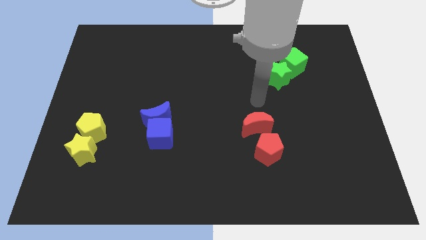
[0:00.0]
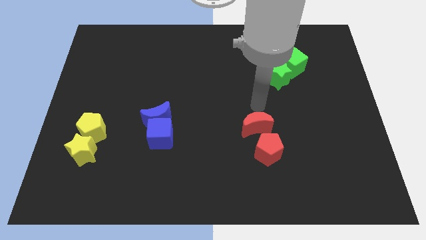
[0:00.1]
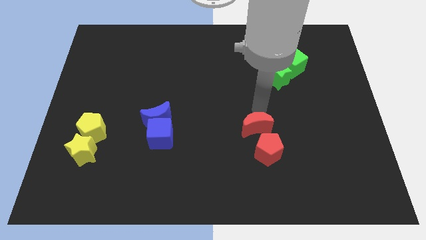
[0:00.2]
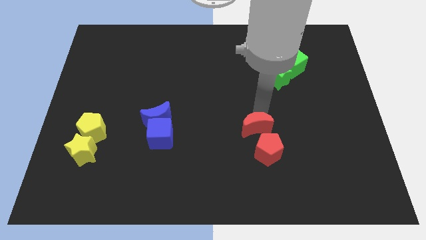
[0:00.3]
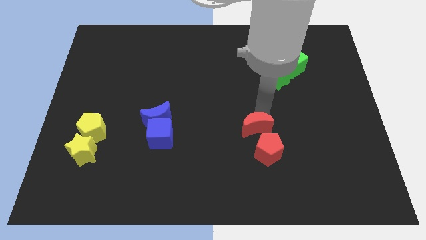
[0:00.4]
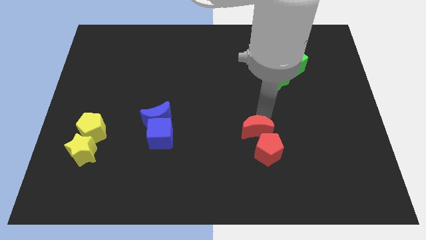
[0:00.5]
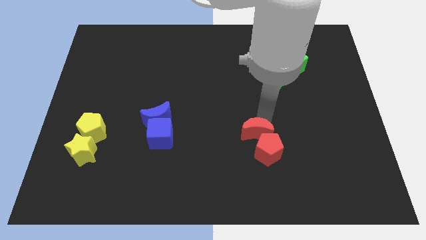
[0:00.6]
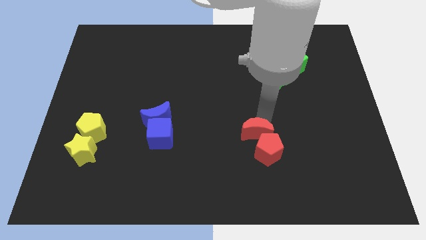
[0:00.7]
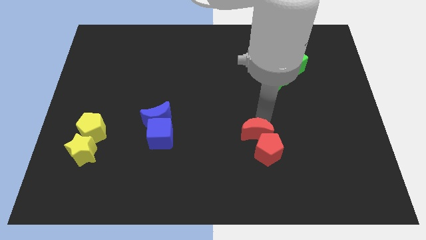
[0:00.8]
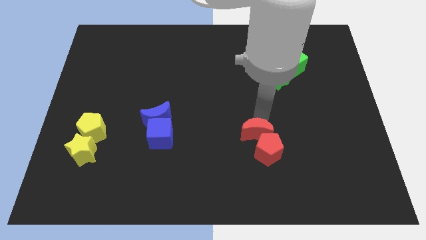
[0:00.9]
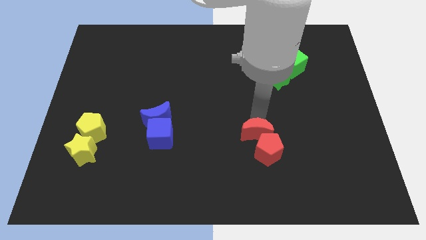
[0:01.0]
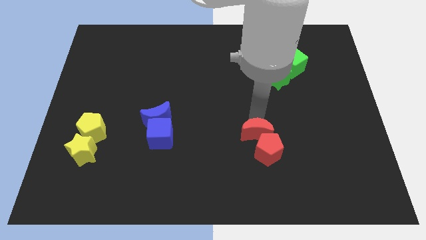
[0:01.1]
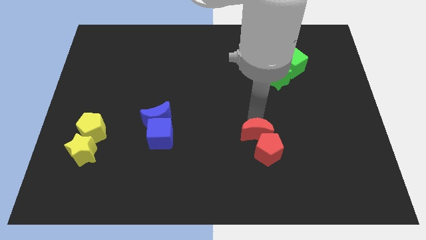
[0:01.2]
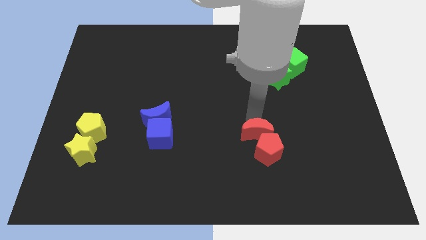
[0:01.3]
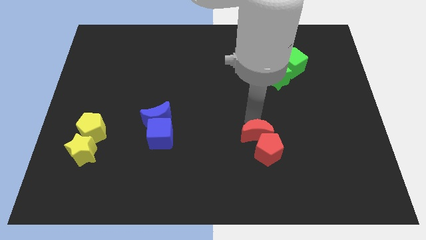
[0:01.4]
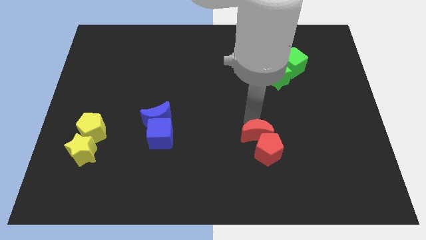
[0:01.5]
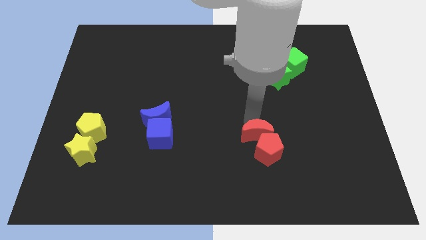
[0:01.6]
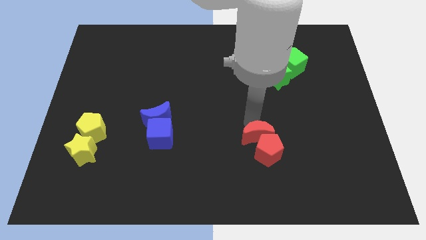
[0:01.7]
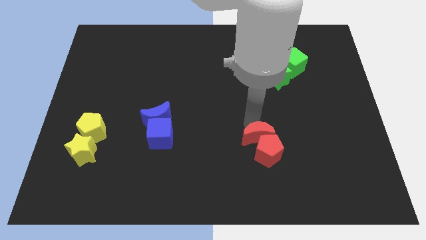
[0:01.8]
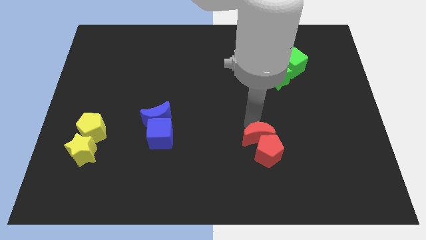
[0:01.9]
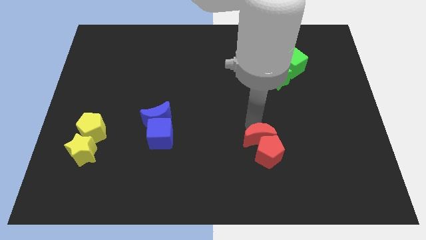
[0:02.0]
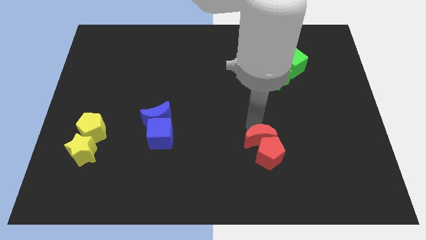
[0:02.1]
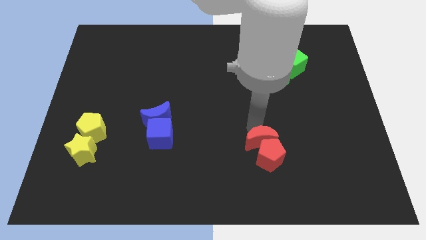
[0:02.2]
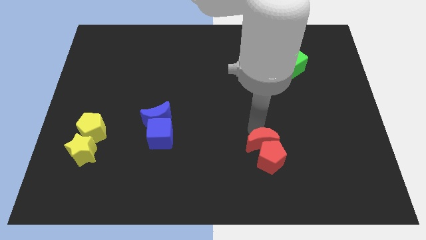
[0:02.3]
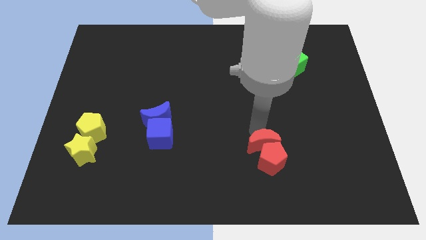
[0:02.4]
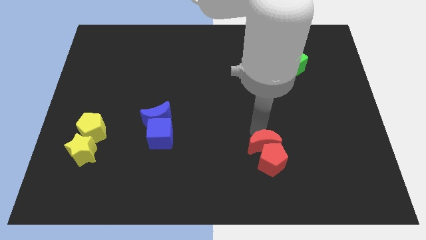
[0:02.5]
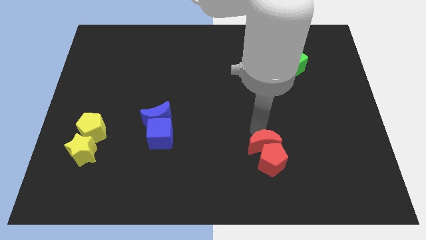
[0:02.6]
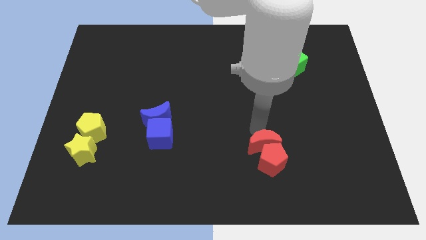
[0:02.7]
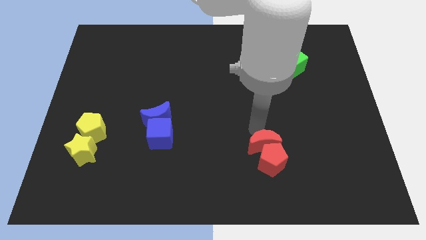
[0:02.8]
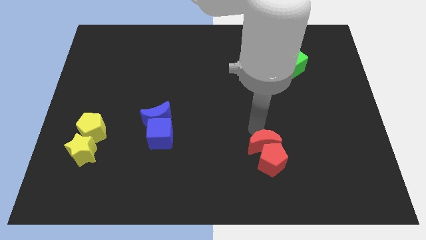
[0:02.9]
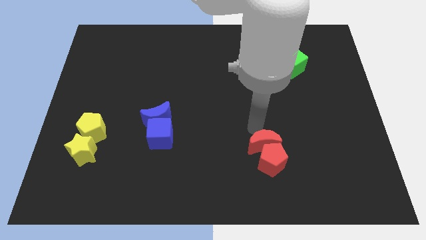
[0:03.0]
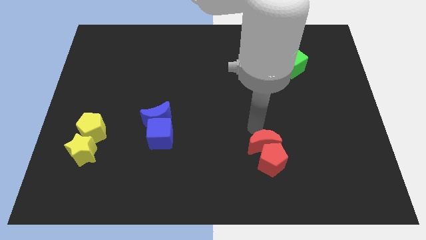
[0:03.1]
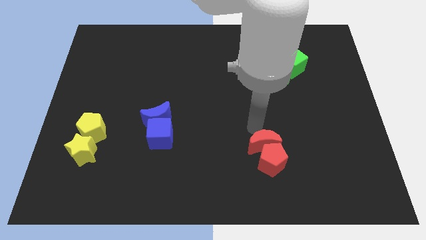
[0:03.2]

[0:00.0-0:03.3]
move the red crescent into the red pentagon

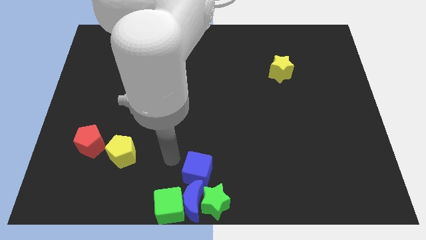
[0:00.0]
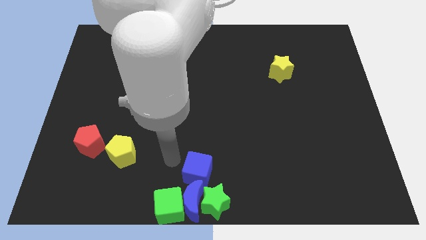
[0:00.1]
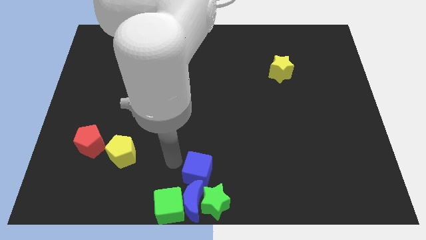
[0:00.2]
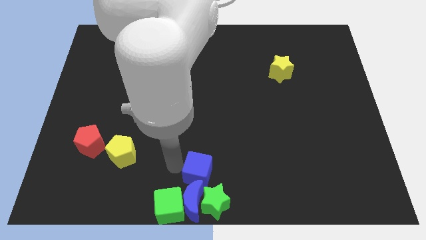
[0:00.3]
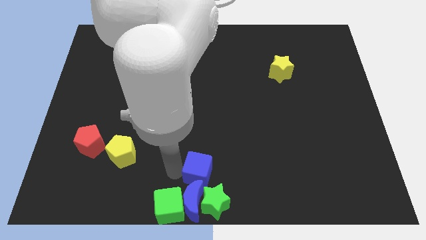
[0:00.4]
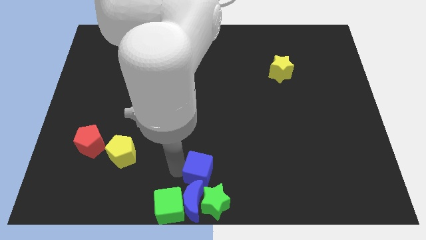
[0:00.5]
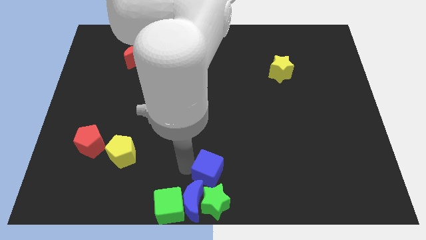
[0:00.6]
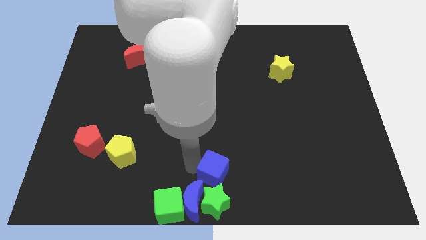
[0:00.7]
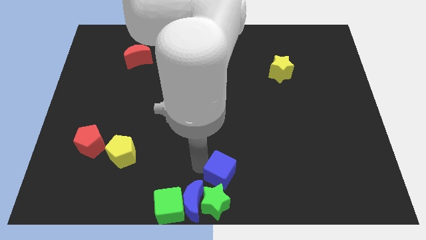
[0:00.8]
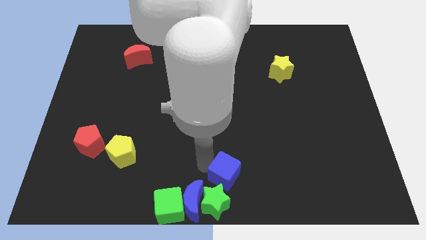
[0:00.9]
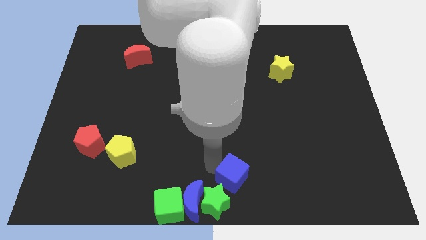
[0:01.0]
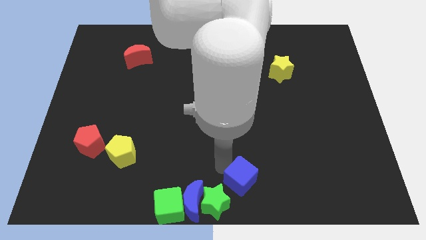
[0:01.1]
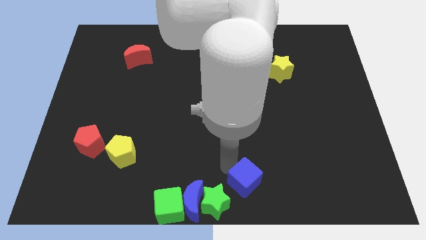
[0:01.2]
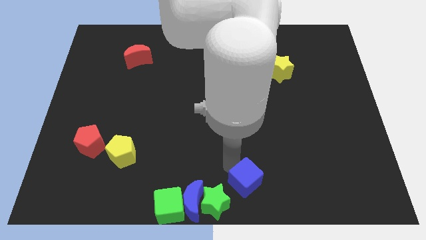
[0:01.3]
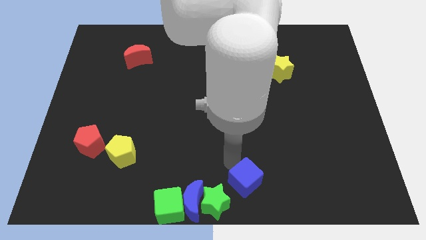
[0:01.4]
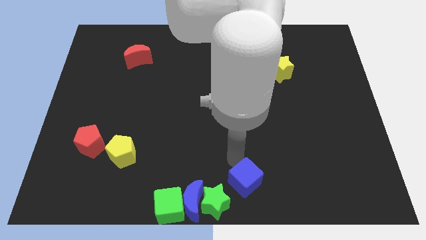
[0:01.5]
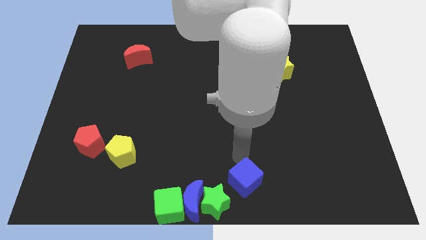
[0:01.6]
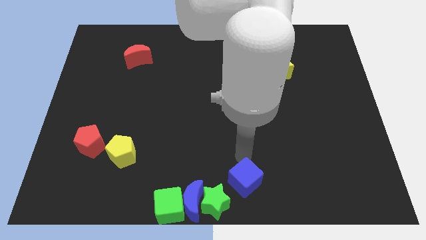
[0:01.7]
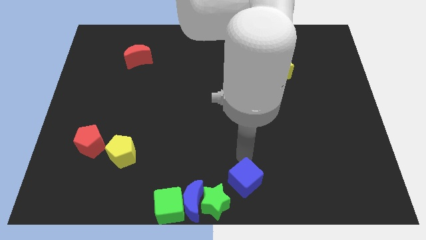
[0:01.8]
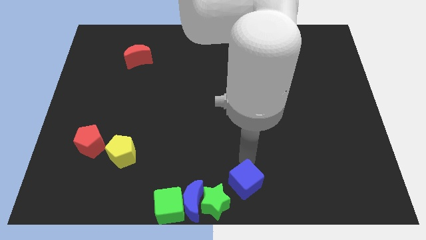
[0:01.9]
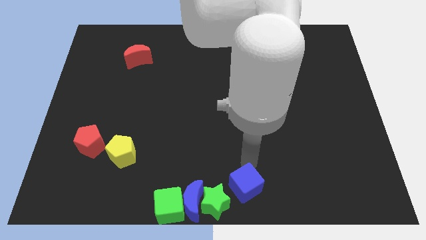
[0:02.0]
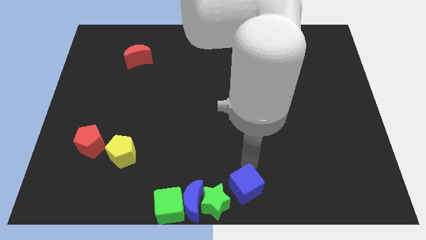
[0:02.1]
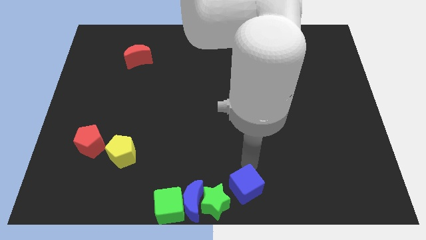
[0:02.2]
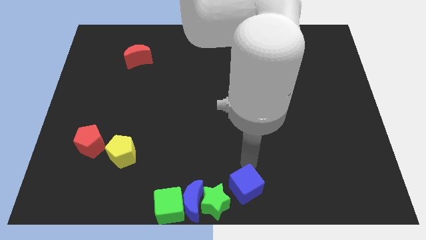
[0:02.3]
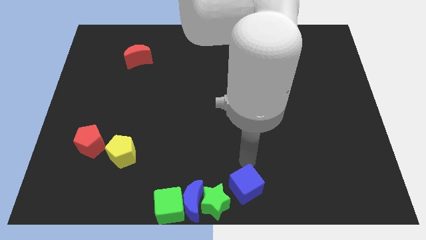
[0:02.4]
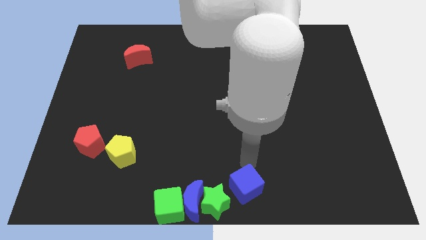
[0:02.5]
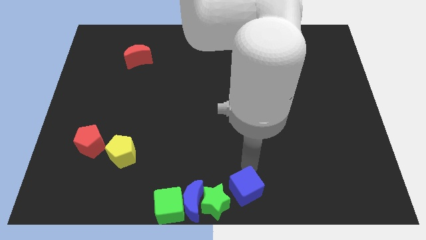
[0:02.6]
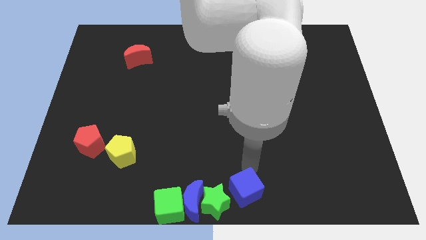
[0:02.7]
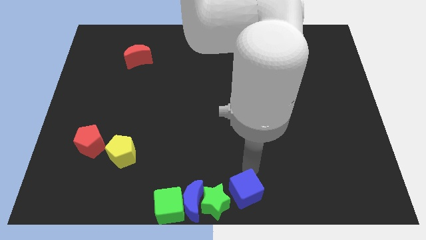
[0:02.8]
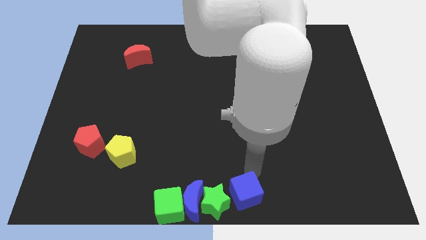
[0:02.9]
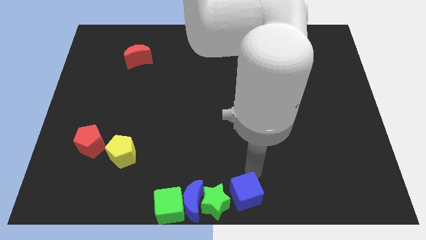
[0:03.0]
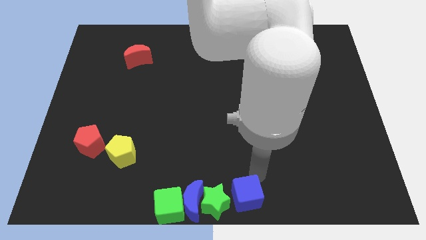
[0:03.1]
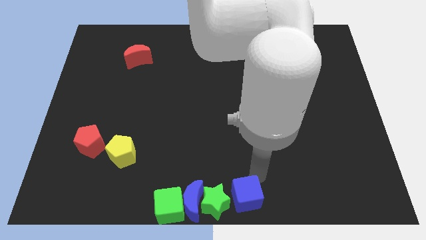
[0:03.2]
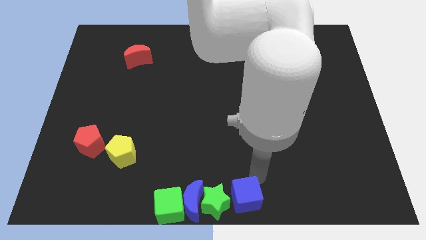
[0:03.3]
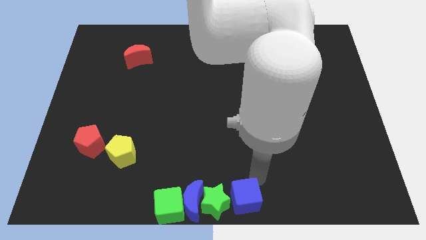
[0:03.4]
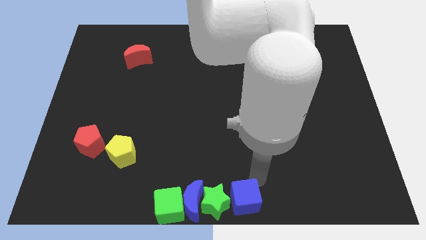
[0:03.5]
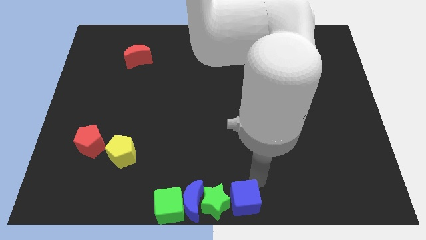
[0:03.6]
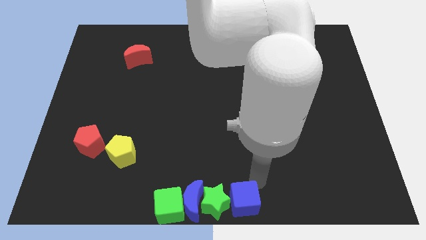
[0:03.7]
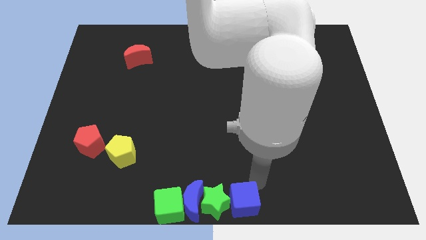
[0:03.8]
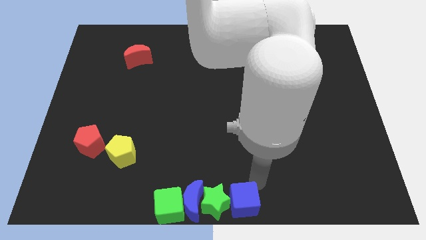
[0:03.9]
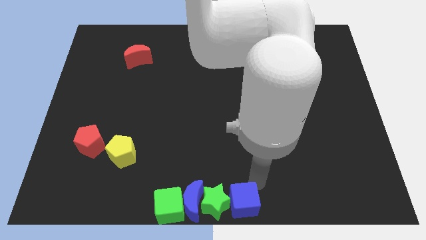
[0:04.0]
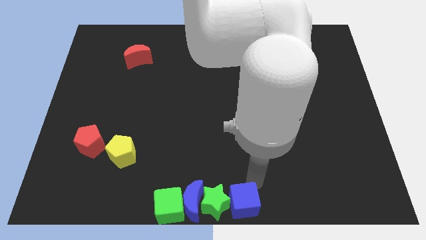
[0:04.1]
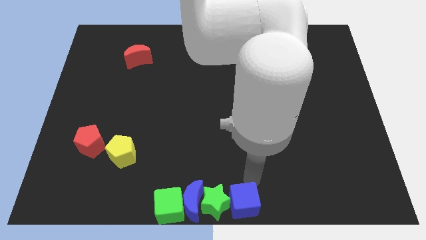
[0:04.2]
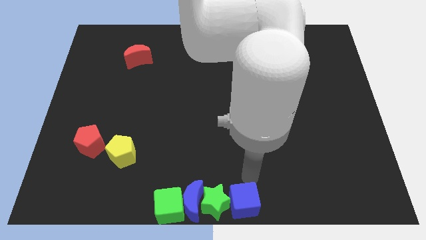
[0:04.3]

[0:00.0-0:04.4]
place the blue cube to the right of the green star

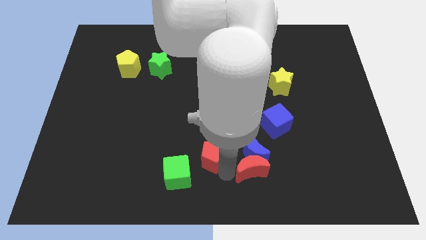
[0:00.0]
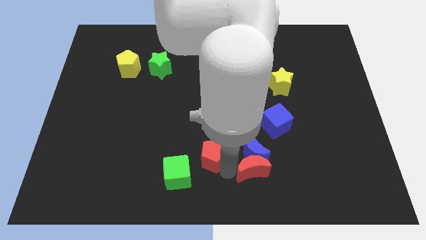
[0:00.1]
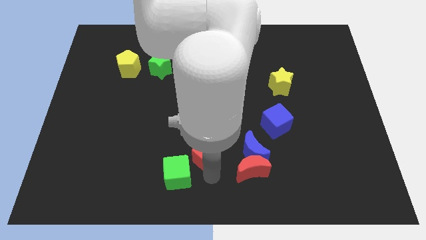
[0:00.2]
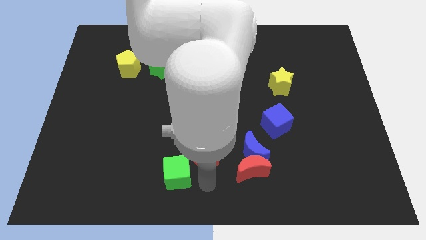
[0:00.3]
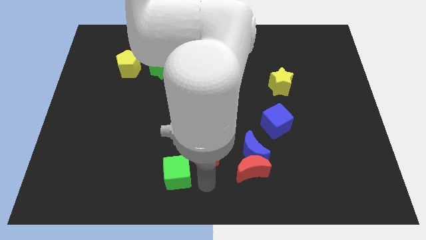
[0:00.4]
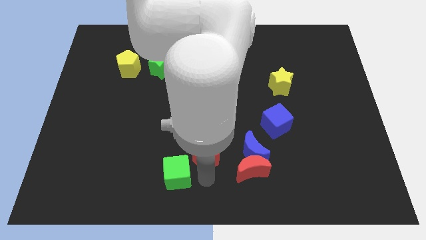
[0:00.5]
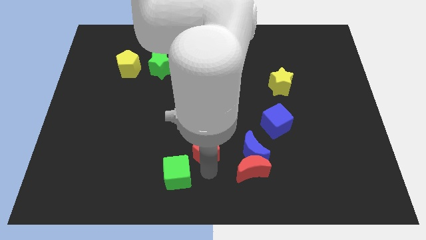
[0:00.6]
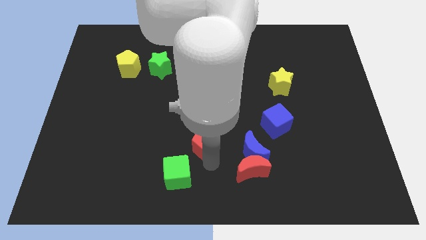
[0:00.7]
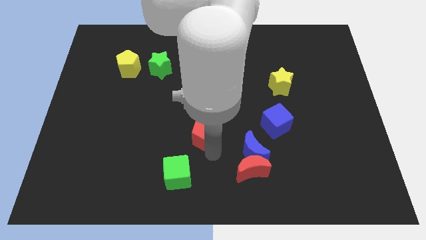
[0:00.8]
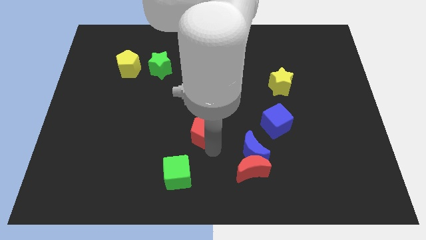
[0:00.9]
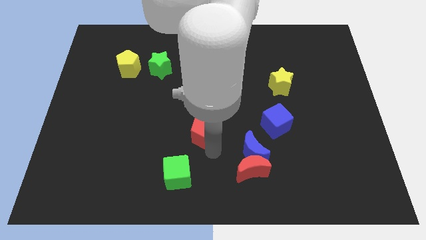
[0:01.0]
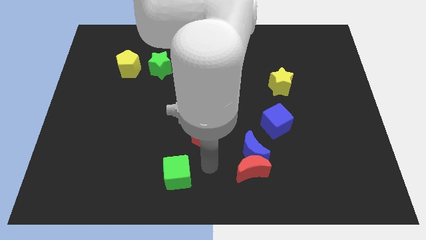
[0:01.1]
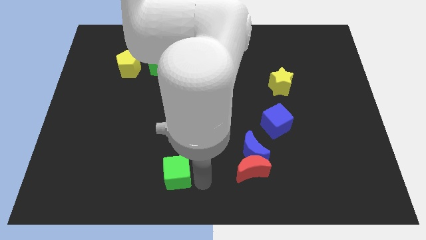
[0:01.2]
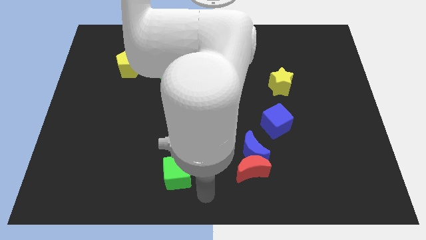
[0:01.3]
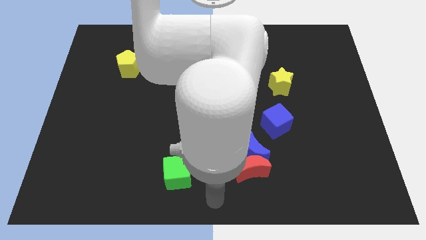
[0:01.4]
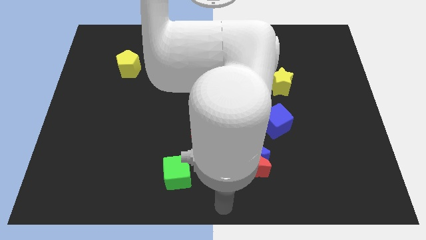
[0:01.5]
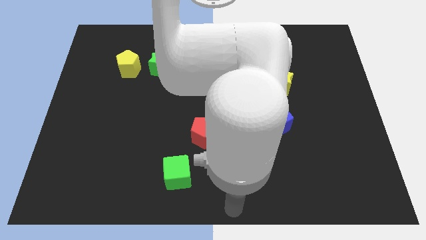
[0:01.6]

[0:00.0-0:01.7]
move the red pentagon slightly towards the the center of the board
